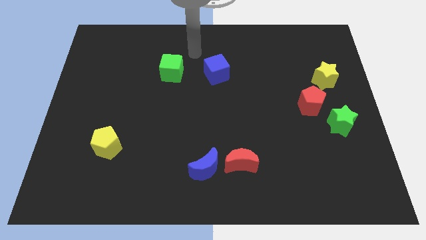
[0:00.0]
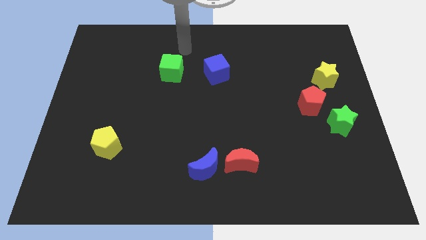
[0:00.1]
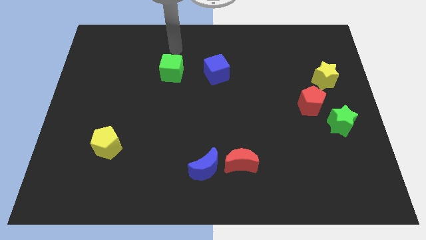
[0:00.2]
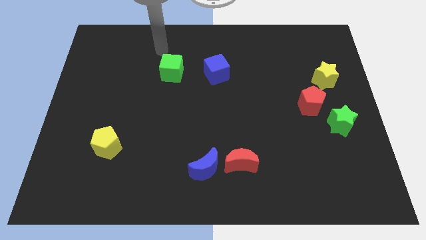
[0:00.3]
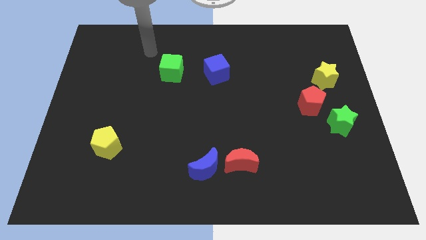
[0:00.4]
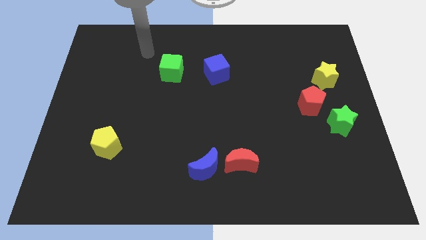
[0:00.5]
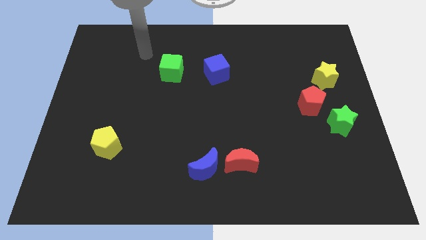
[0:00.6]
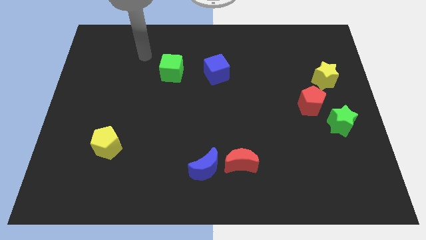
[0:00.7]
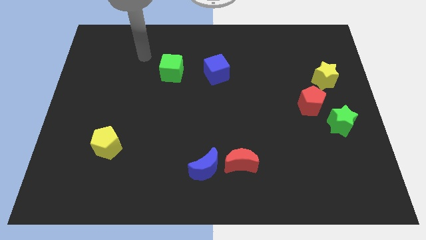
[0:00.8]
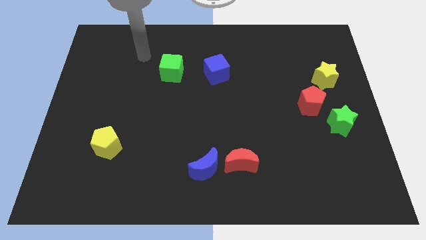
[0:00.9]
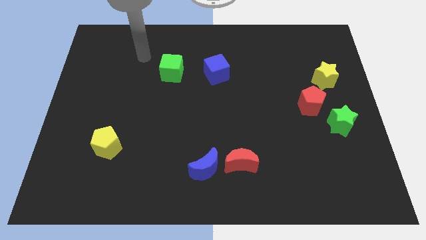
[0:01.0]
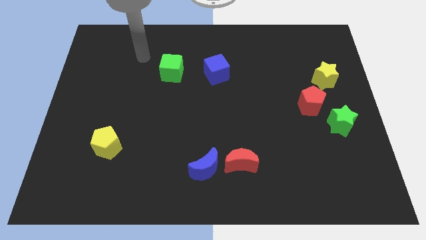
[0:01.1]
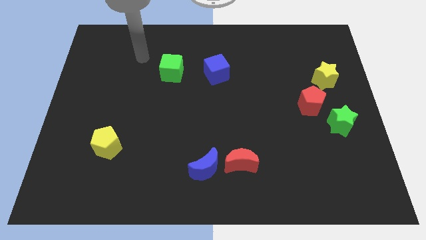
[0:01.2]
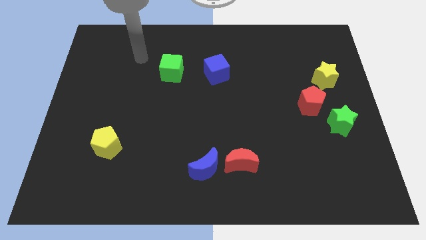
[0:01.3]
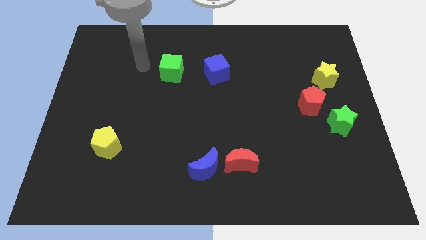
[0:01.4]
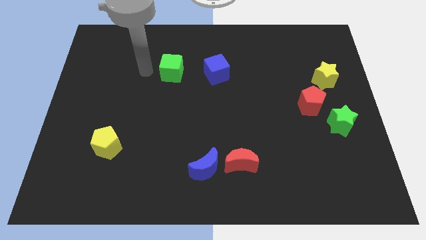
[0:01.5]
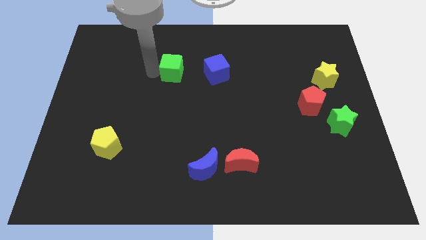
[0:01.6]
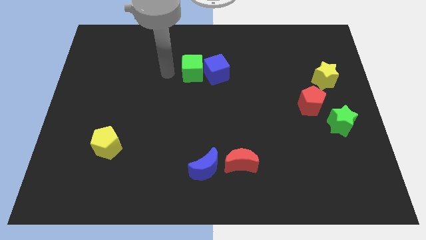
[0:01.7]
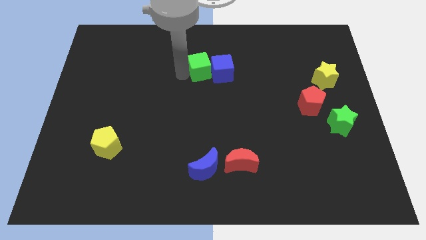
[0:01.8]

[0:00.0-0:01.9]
push the green cube into the left side of the blue cube

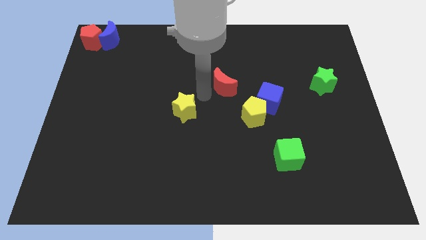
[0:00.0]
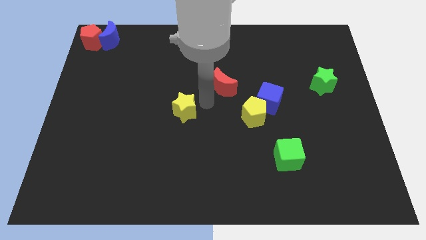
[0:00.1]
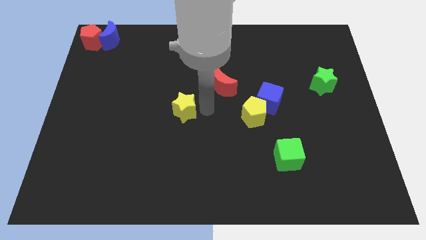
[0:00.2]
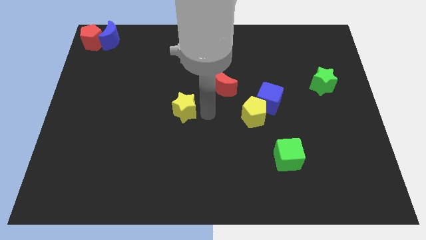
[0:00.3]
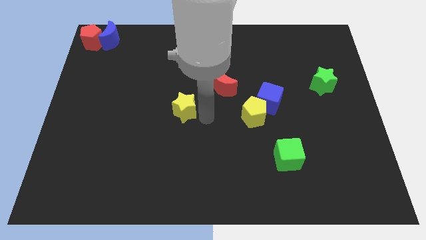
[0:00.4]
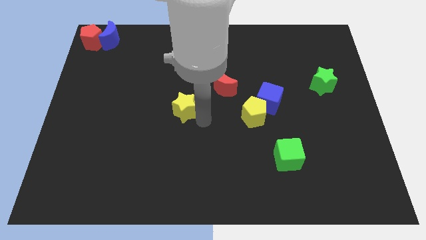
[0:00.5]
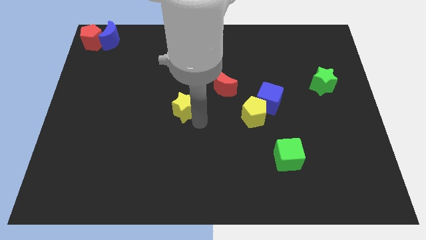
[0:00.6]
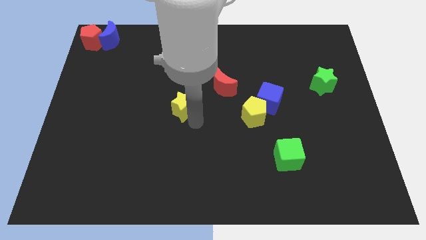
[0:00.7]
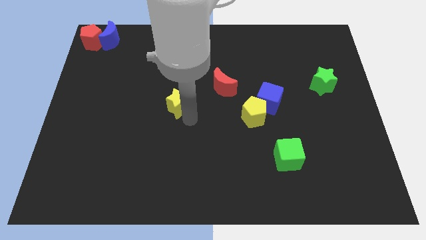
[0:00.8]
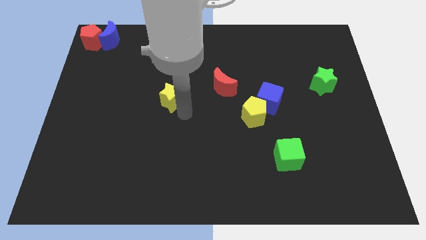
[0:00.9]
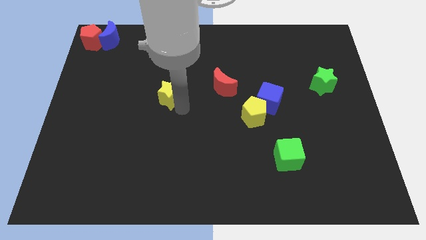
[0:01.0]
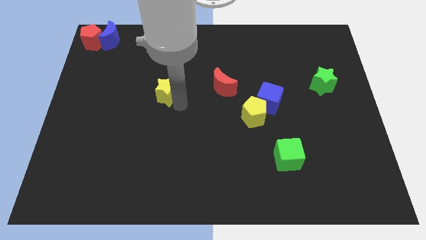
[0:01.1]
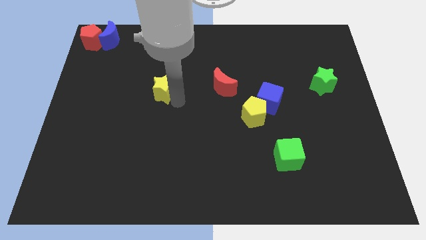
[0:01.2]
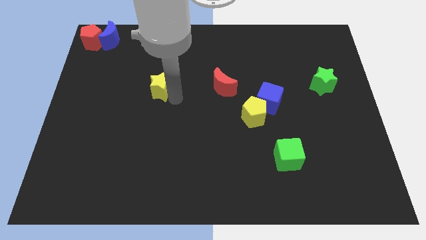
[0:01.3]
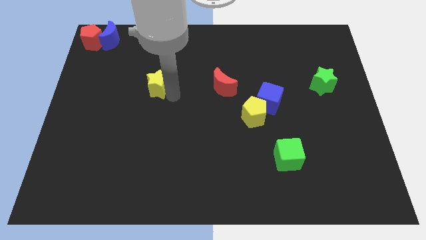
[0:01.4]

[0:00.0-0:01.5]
push the yellow star to the left of the red crescent

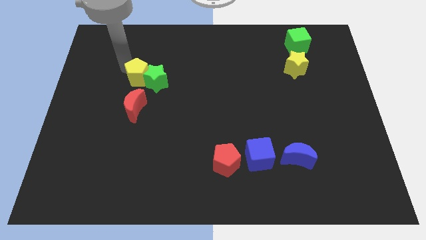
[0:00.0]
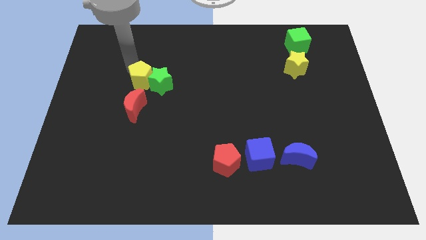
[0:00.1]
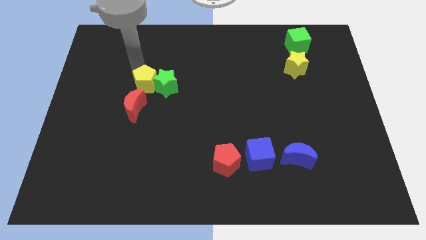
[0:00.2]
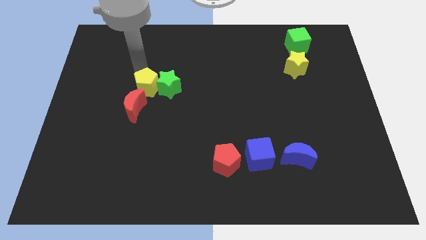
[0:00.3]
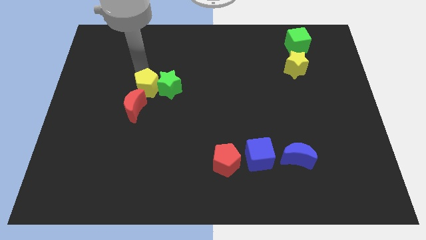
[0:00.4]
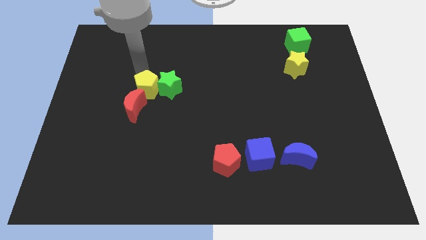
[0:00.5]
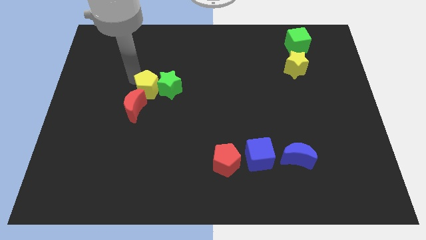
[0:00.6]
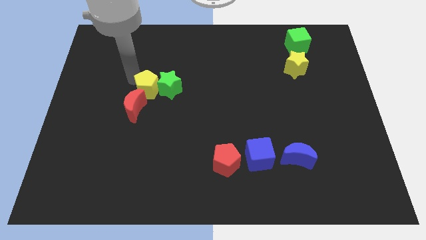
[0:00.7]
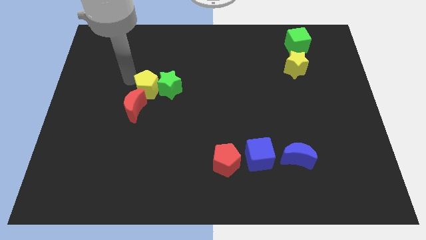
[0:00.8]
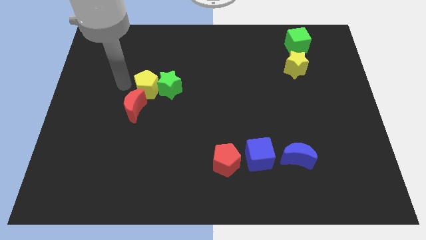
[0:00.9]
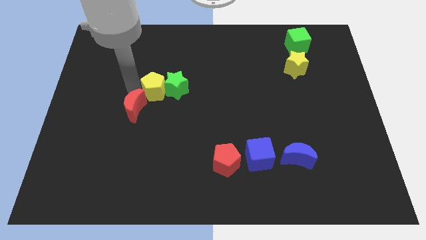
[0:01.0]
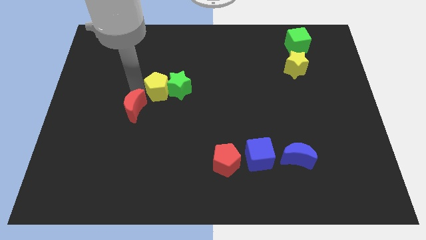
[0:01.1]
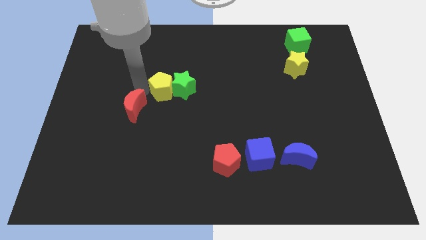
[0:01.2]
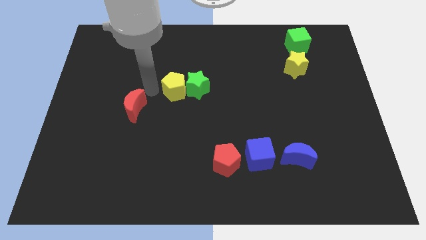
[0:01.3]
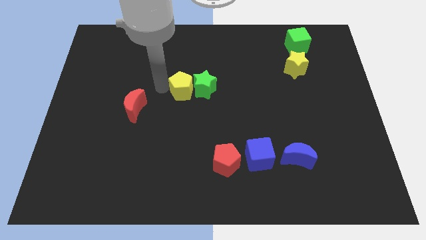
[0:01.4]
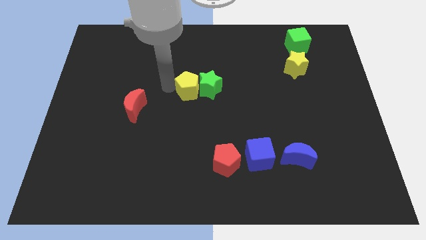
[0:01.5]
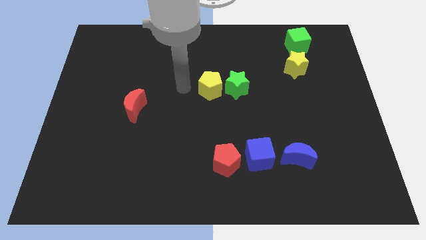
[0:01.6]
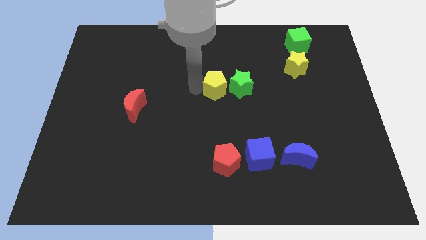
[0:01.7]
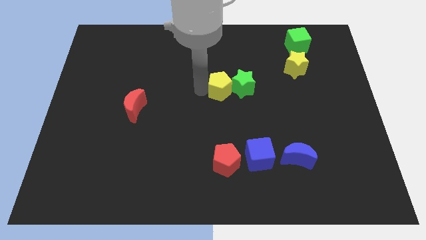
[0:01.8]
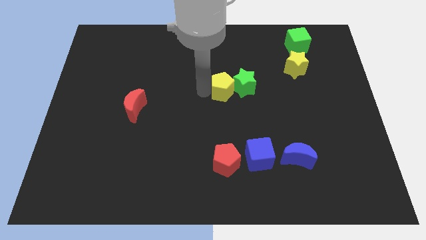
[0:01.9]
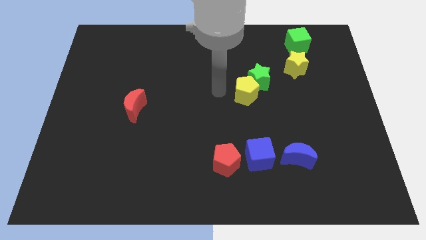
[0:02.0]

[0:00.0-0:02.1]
push the yellow pentagon and green star towards the yellow star

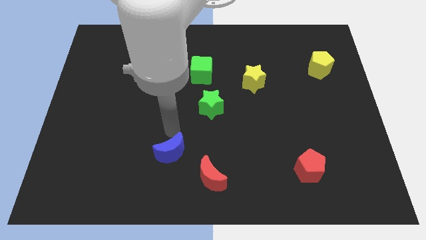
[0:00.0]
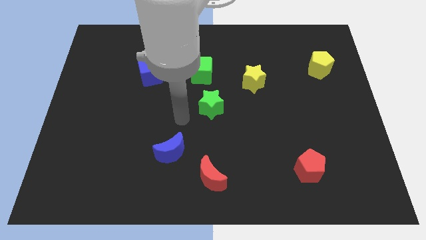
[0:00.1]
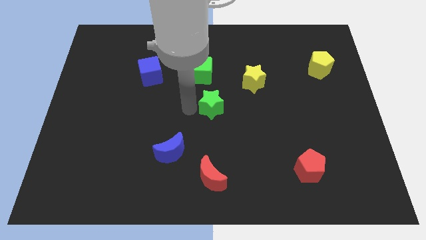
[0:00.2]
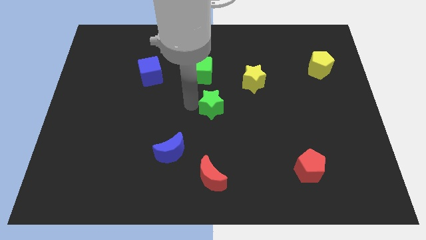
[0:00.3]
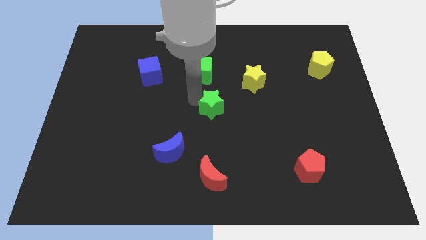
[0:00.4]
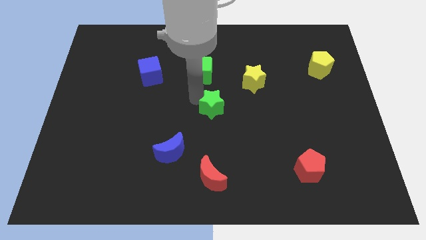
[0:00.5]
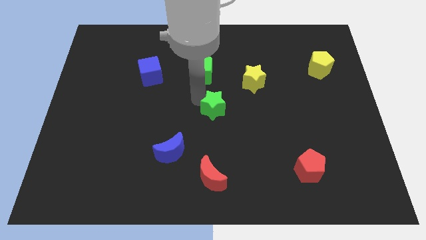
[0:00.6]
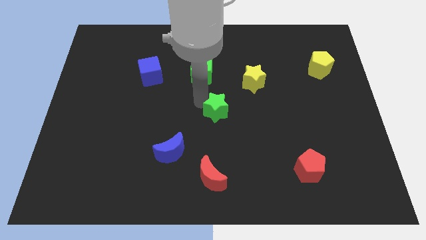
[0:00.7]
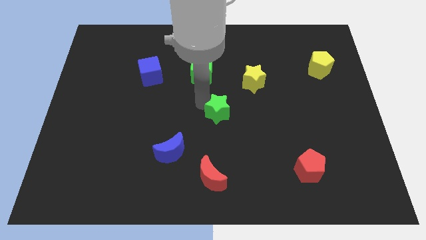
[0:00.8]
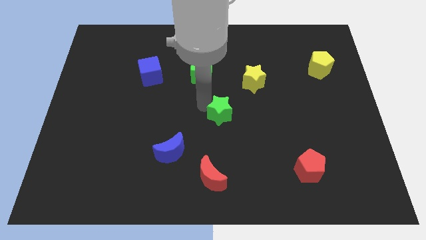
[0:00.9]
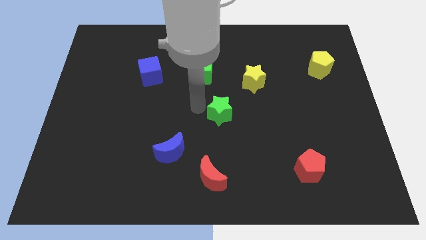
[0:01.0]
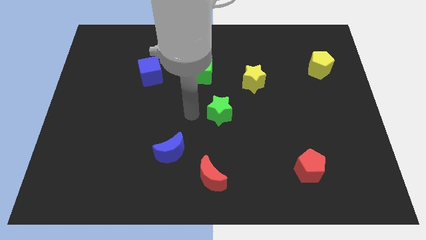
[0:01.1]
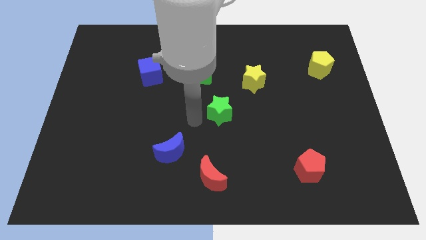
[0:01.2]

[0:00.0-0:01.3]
push the green star to the centre of the board

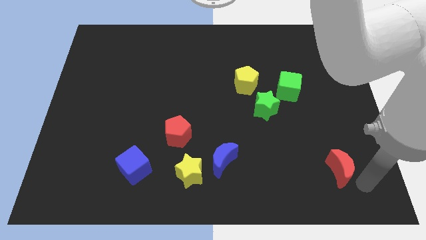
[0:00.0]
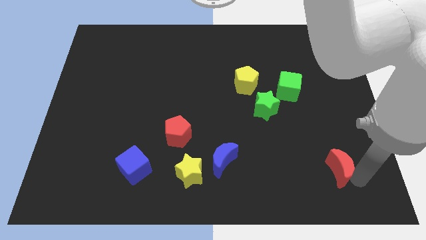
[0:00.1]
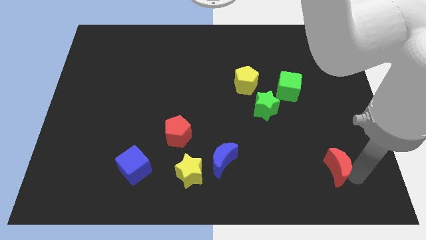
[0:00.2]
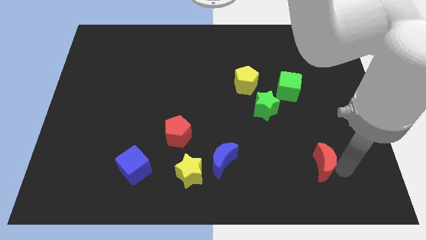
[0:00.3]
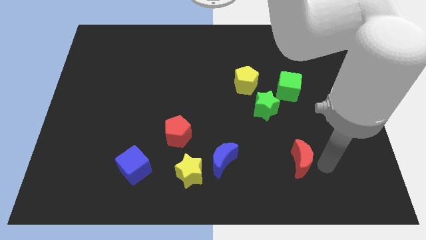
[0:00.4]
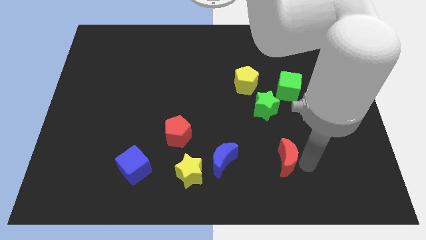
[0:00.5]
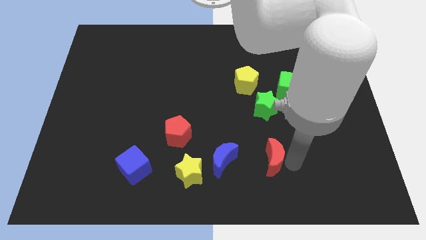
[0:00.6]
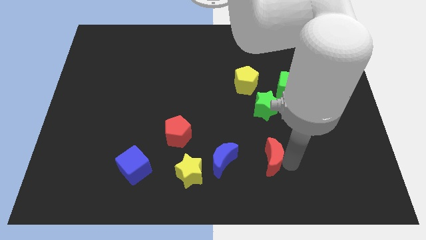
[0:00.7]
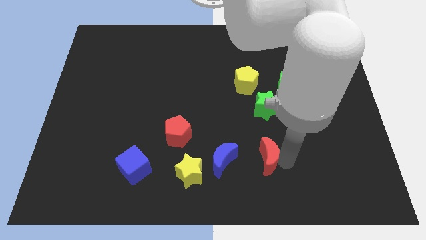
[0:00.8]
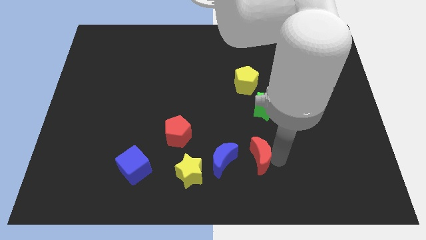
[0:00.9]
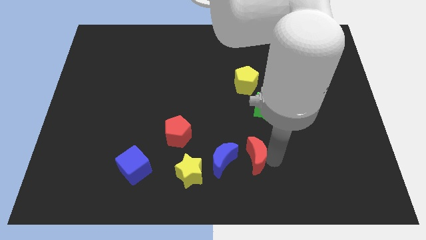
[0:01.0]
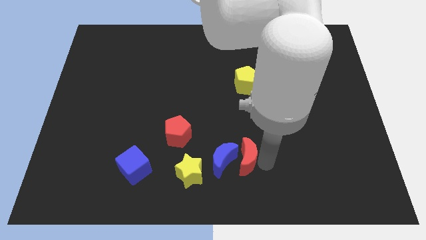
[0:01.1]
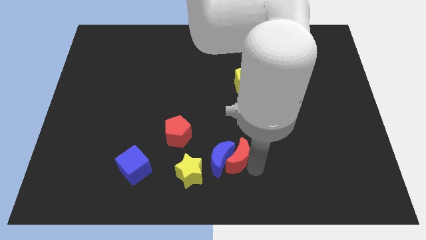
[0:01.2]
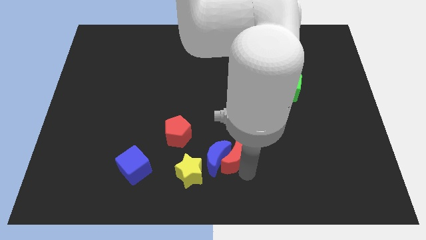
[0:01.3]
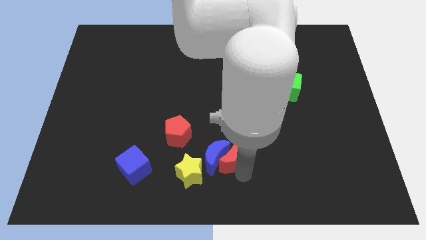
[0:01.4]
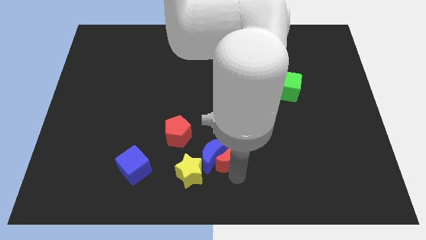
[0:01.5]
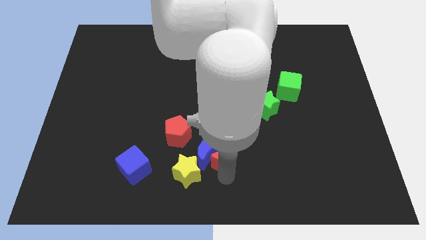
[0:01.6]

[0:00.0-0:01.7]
move the red moon into the blue moon

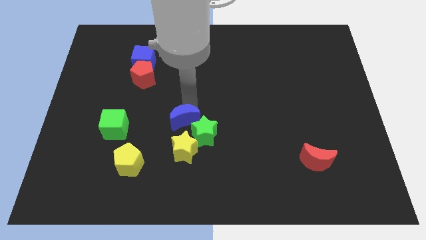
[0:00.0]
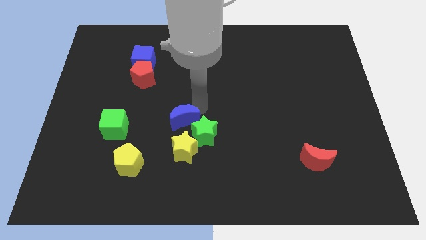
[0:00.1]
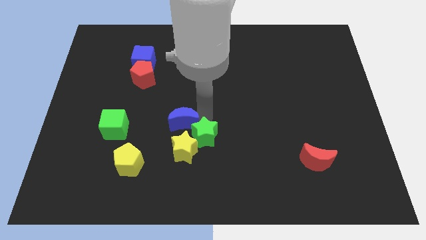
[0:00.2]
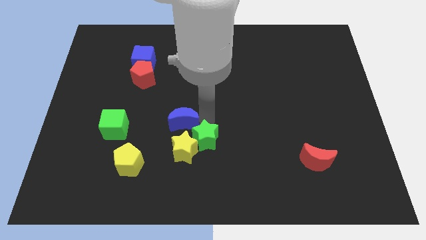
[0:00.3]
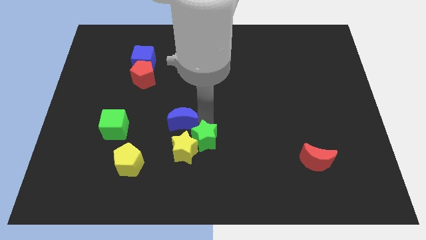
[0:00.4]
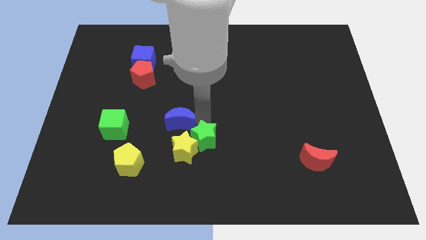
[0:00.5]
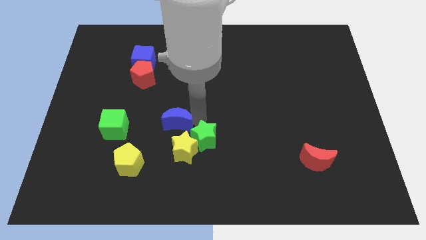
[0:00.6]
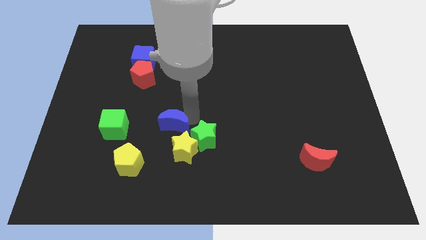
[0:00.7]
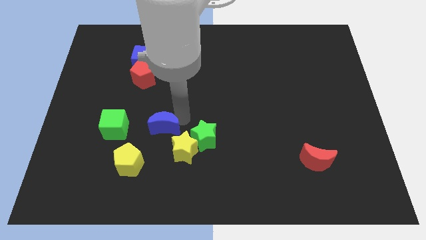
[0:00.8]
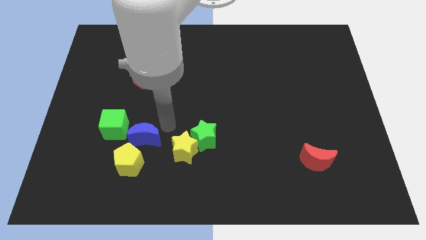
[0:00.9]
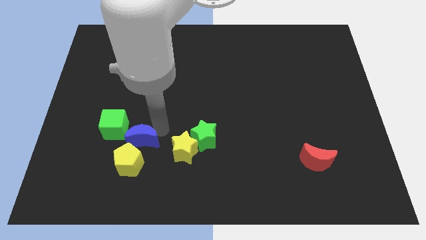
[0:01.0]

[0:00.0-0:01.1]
move blue crescent towards yellow pentagon
